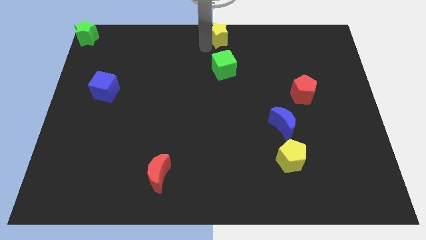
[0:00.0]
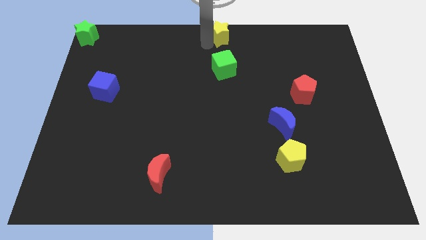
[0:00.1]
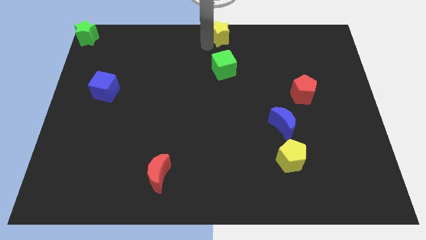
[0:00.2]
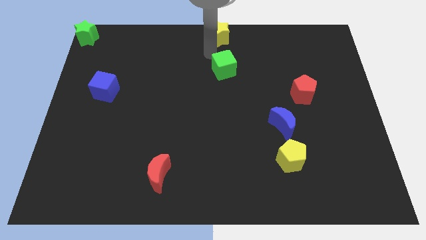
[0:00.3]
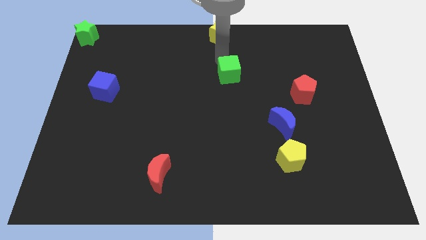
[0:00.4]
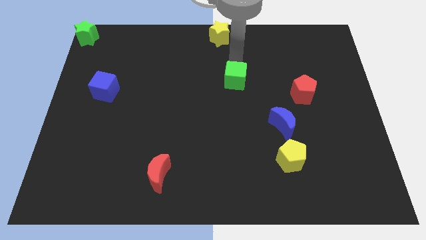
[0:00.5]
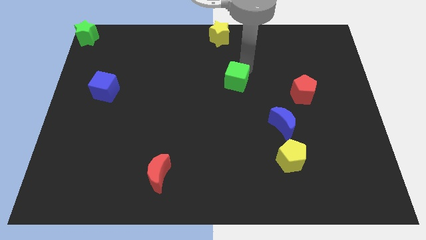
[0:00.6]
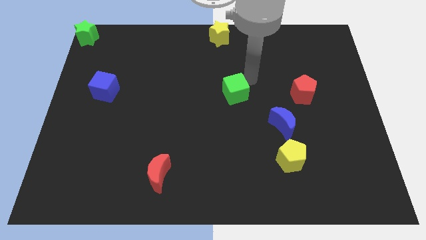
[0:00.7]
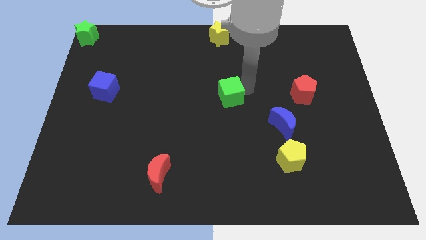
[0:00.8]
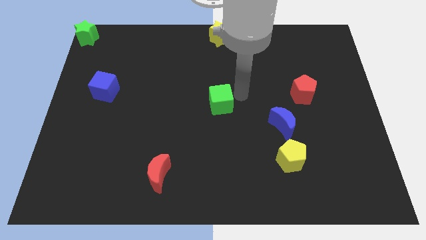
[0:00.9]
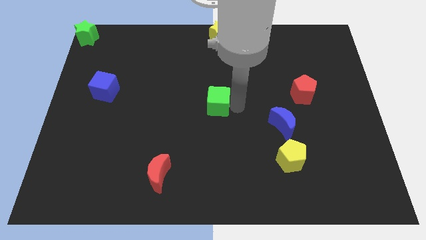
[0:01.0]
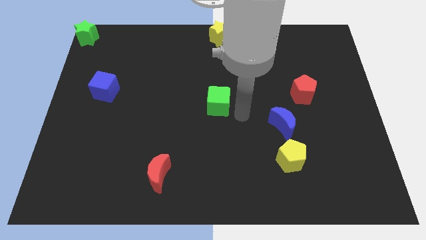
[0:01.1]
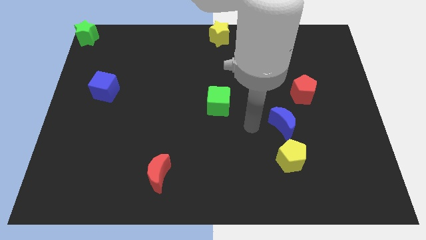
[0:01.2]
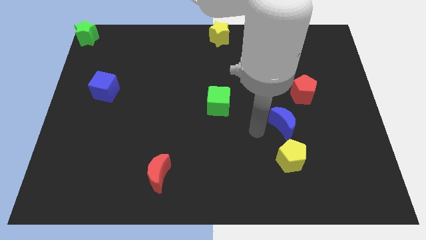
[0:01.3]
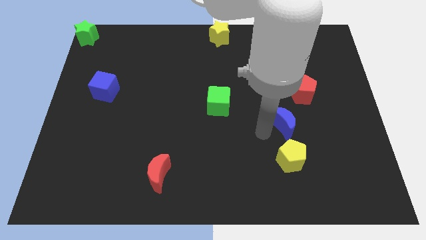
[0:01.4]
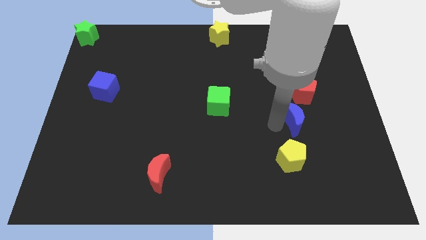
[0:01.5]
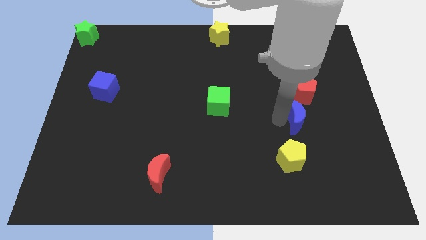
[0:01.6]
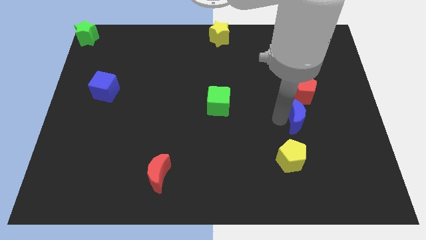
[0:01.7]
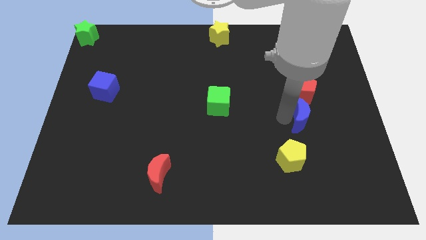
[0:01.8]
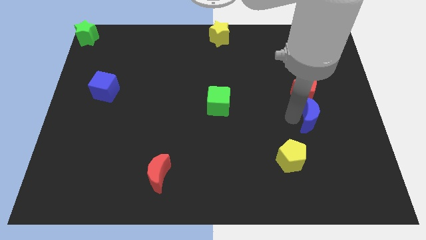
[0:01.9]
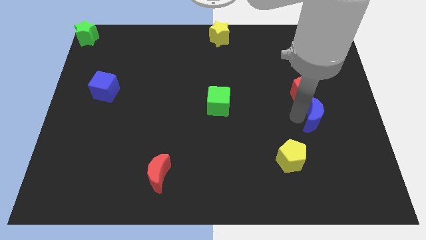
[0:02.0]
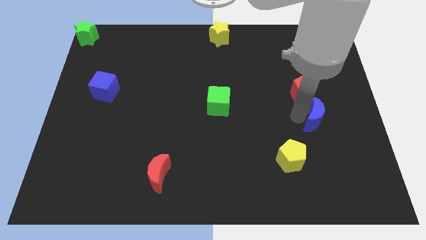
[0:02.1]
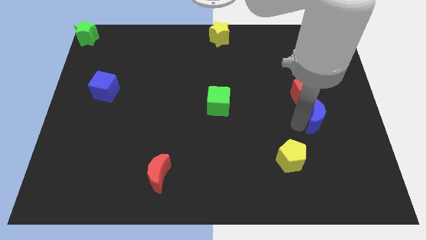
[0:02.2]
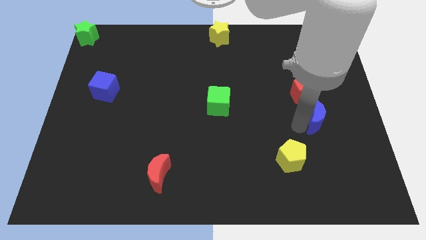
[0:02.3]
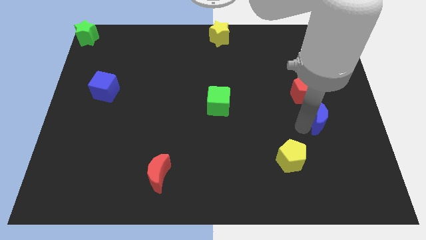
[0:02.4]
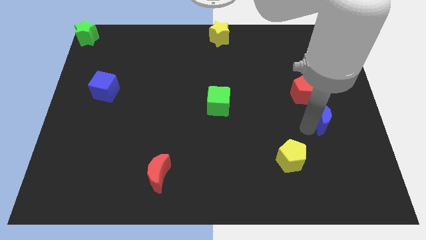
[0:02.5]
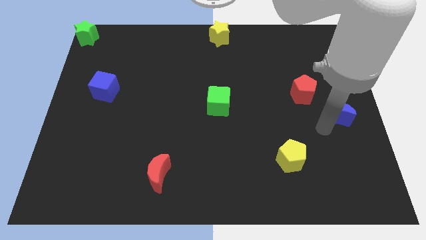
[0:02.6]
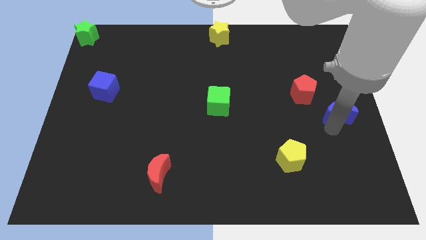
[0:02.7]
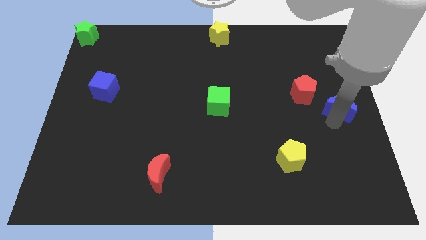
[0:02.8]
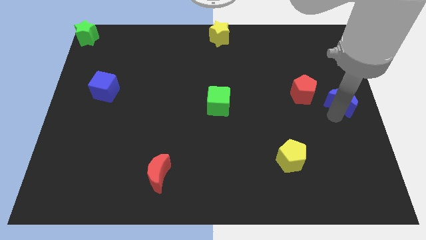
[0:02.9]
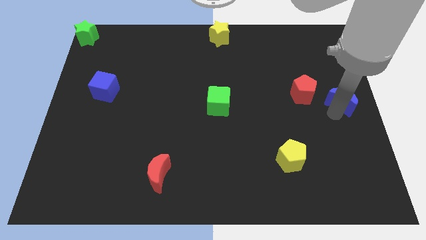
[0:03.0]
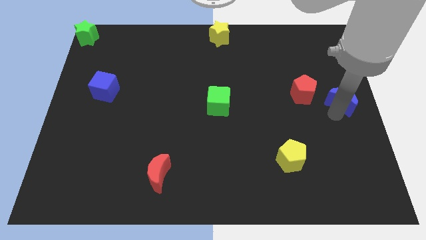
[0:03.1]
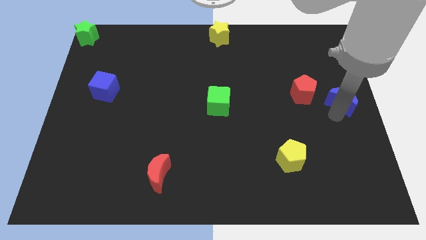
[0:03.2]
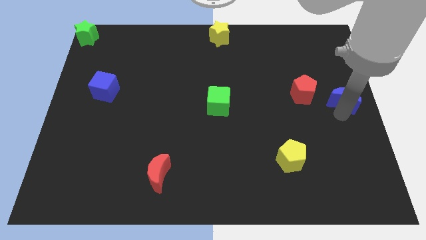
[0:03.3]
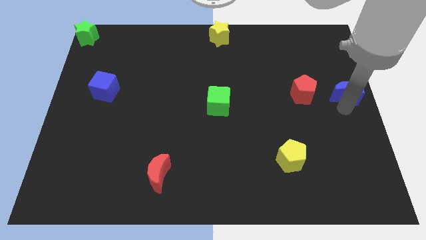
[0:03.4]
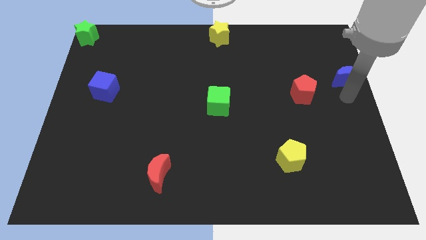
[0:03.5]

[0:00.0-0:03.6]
place the blue moon to the center right of the board

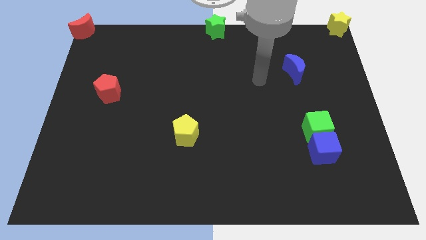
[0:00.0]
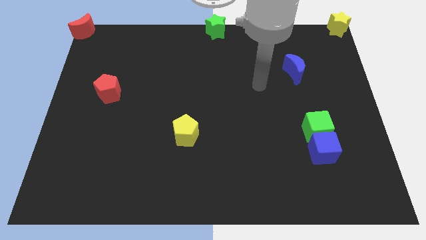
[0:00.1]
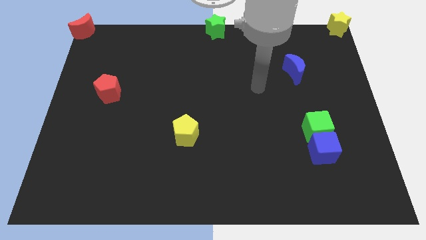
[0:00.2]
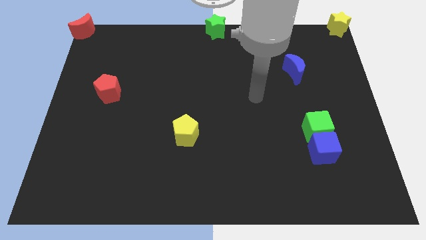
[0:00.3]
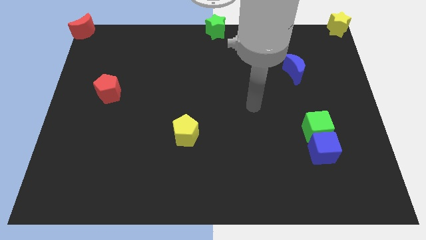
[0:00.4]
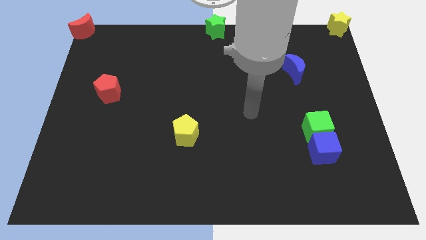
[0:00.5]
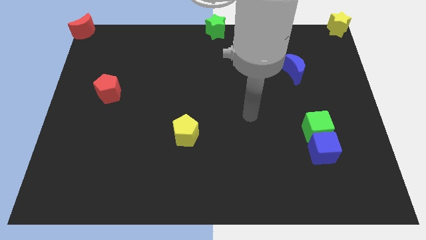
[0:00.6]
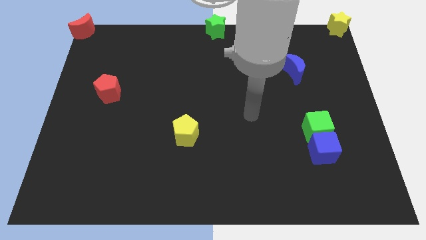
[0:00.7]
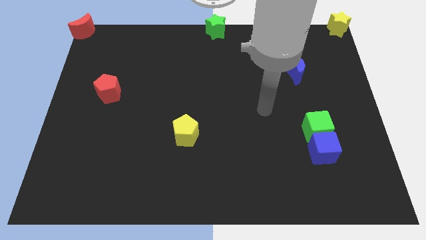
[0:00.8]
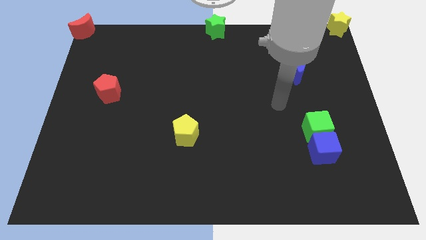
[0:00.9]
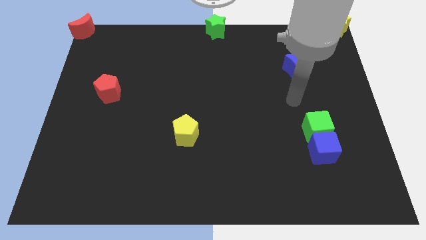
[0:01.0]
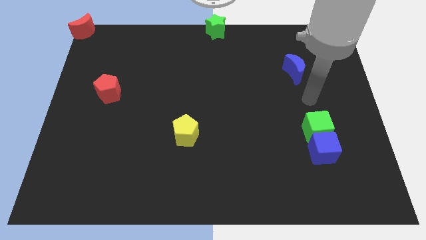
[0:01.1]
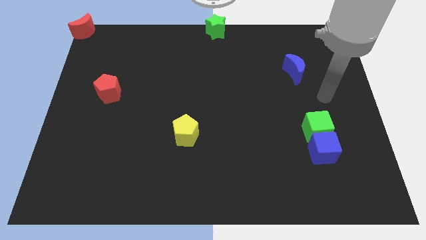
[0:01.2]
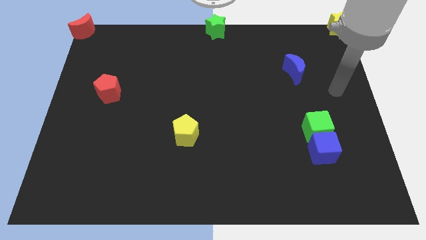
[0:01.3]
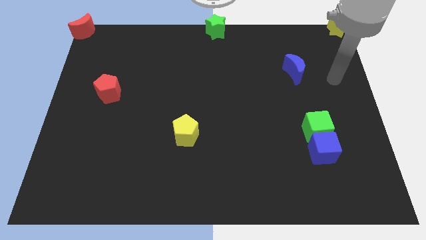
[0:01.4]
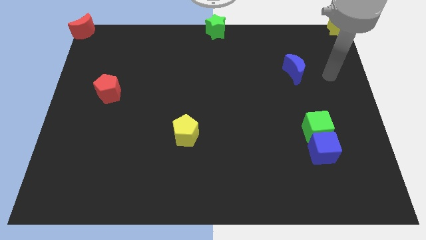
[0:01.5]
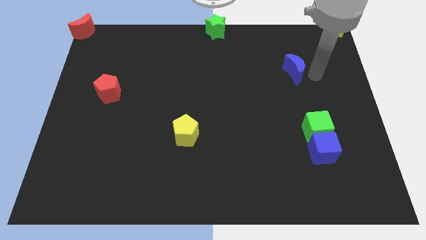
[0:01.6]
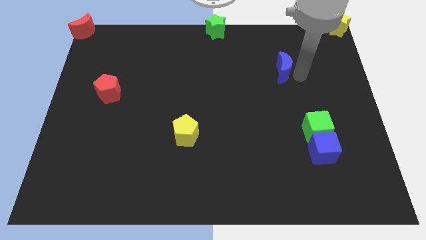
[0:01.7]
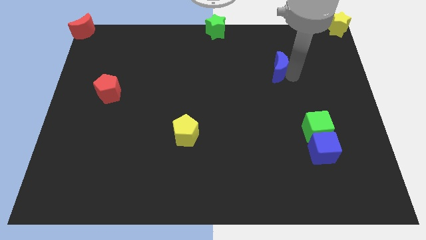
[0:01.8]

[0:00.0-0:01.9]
slightly push the blue moon to the left

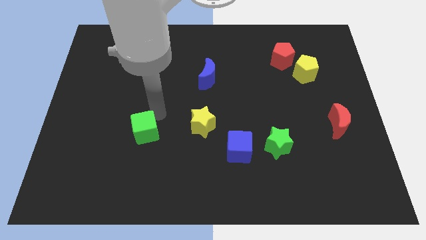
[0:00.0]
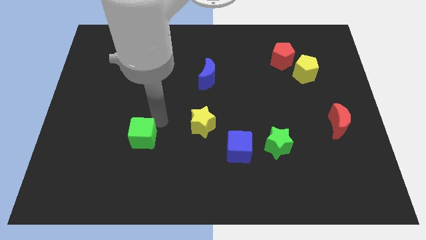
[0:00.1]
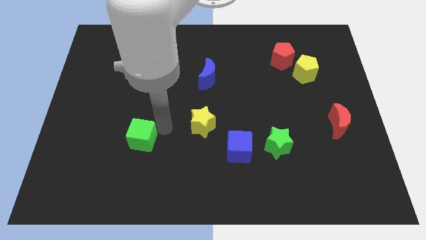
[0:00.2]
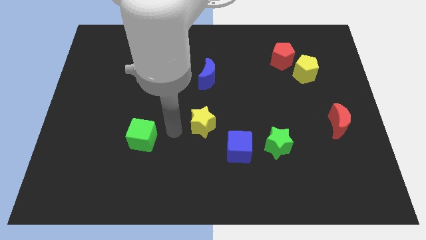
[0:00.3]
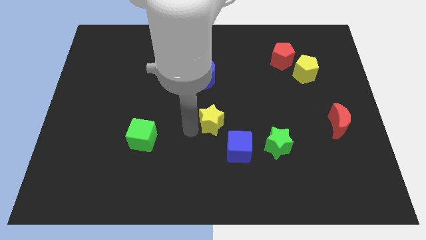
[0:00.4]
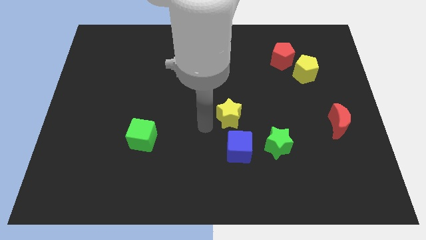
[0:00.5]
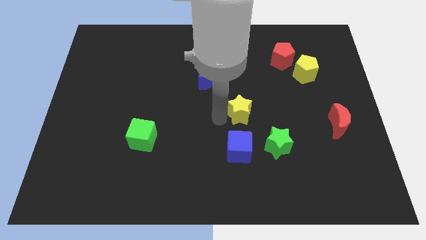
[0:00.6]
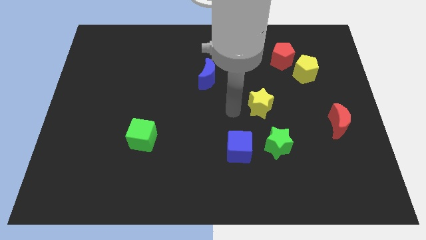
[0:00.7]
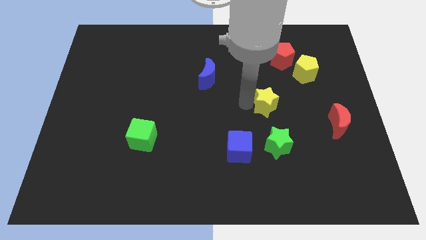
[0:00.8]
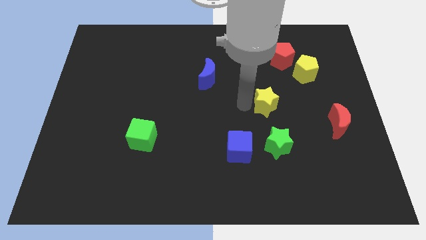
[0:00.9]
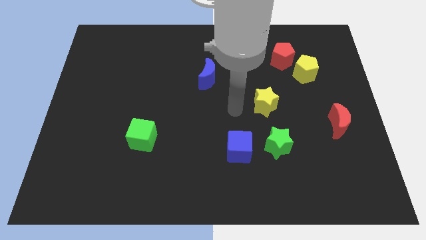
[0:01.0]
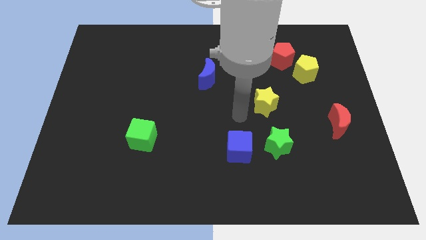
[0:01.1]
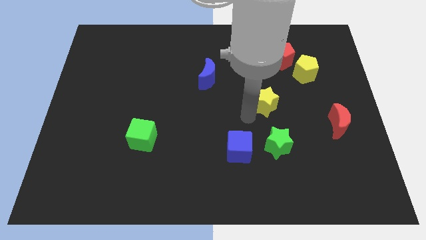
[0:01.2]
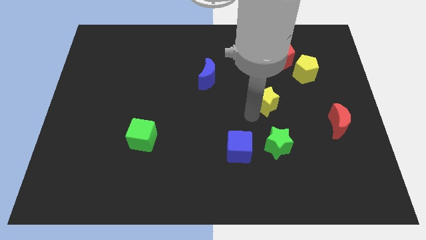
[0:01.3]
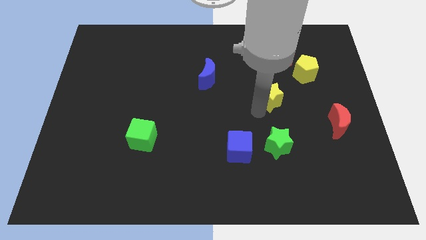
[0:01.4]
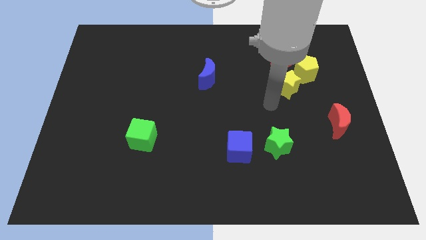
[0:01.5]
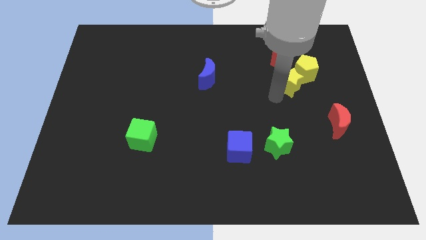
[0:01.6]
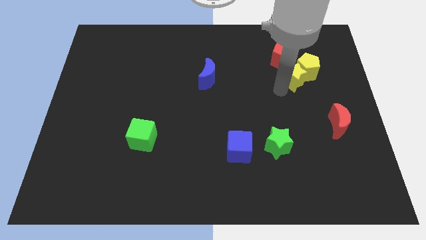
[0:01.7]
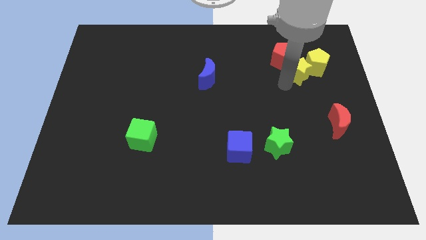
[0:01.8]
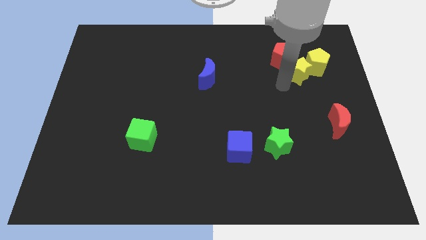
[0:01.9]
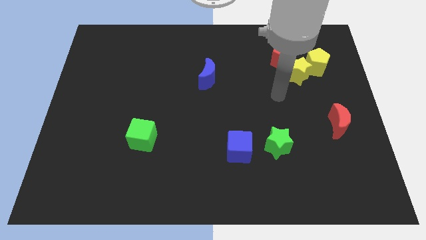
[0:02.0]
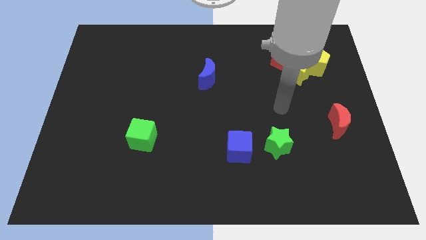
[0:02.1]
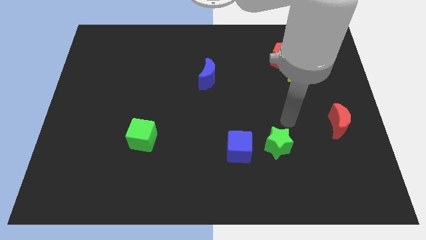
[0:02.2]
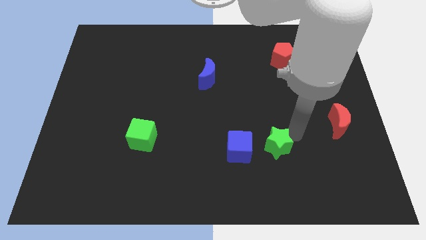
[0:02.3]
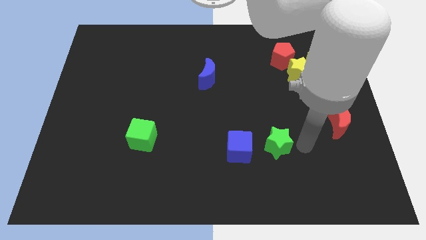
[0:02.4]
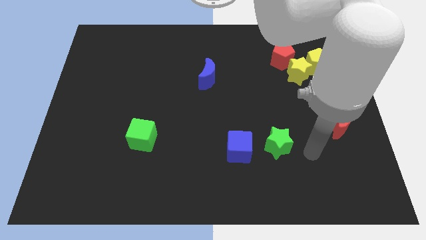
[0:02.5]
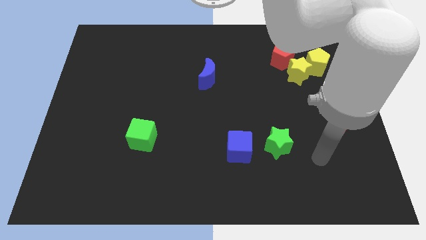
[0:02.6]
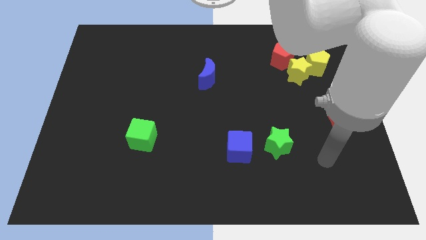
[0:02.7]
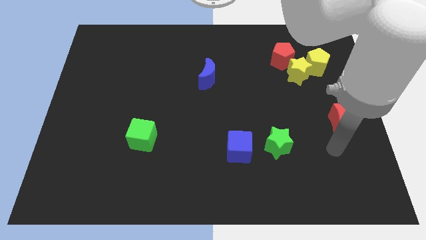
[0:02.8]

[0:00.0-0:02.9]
push the yellow star into the yellow pentagon

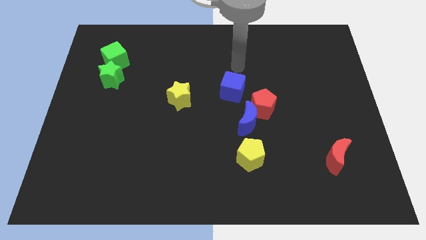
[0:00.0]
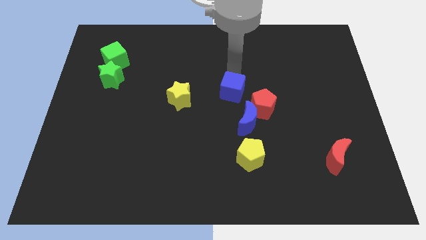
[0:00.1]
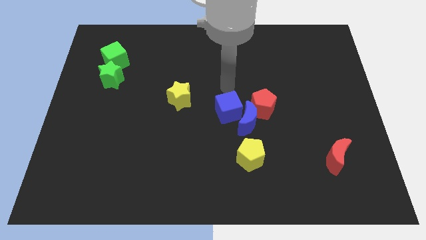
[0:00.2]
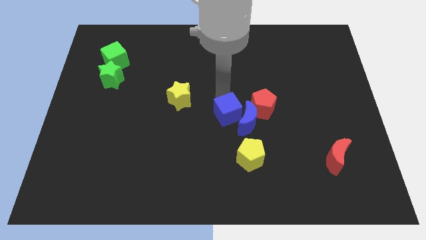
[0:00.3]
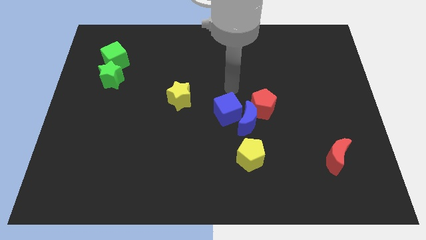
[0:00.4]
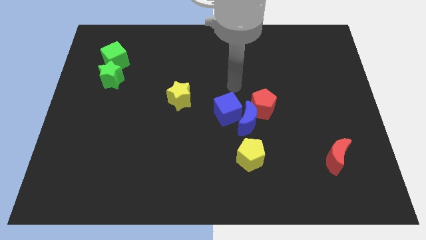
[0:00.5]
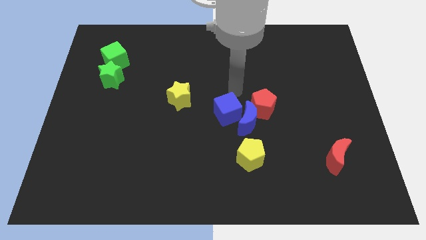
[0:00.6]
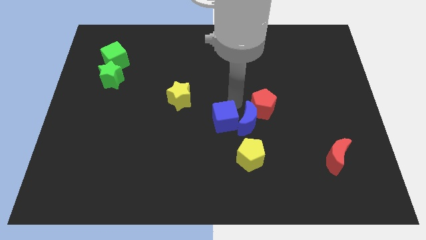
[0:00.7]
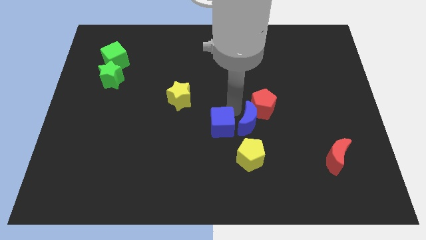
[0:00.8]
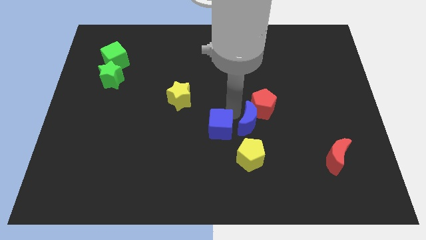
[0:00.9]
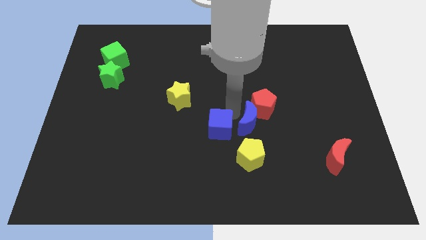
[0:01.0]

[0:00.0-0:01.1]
push the blue cube to the left of the blue crescent
